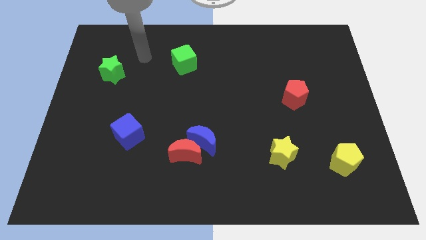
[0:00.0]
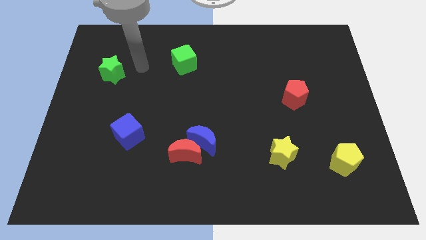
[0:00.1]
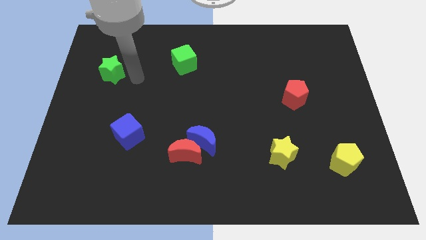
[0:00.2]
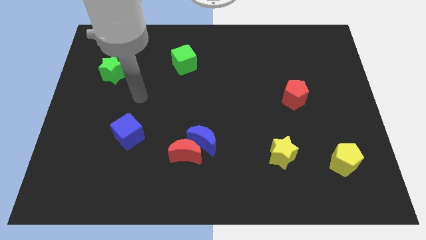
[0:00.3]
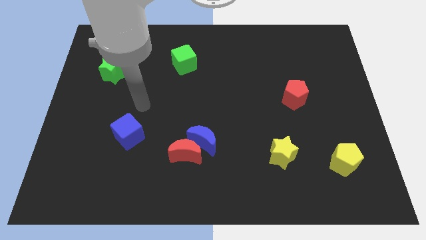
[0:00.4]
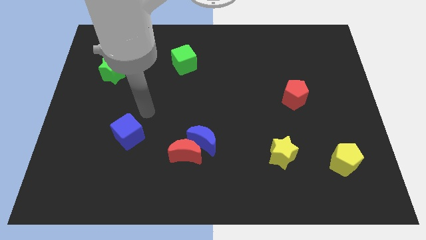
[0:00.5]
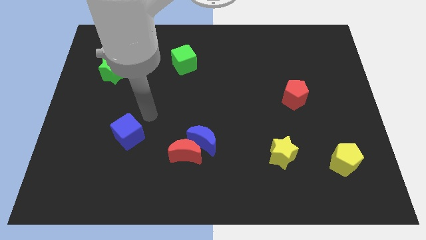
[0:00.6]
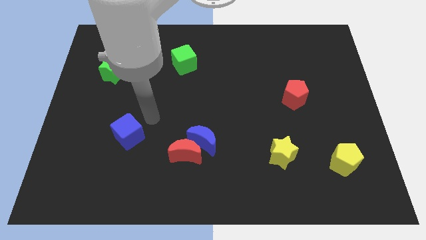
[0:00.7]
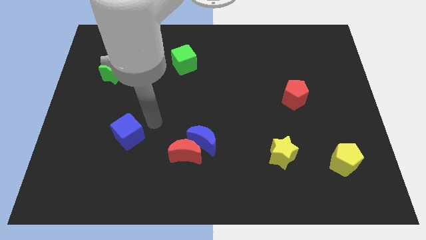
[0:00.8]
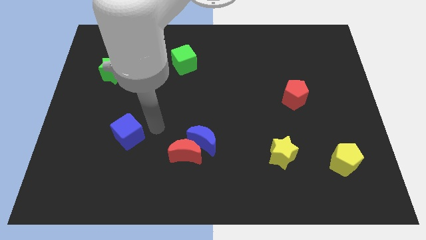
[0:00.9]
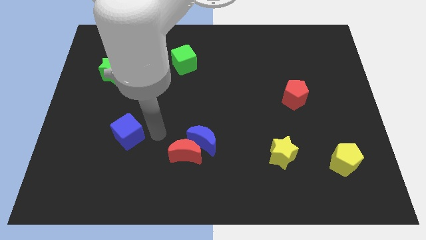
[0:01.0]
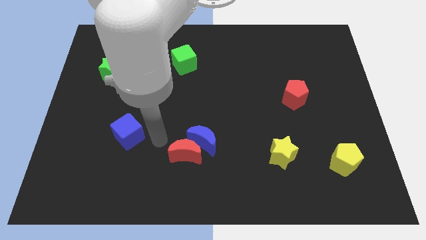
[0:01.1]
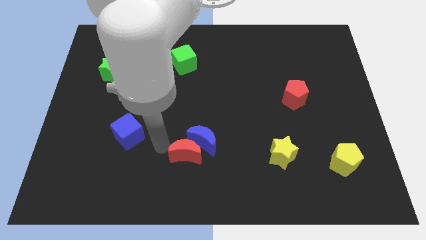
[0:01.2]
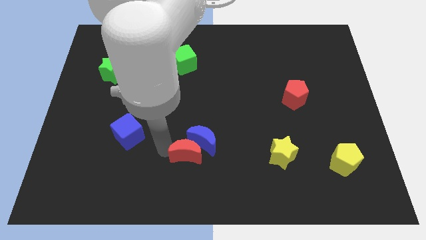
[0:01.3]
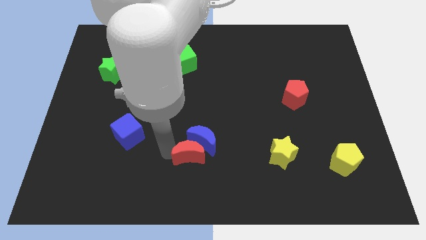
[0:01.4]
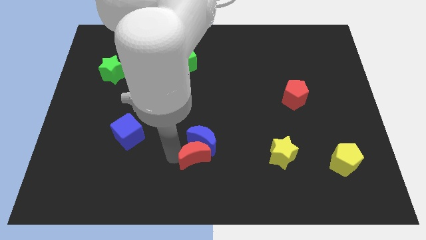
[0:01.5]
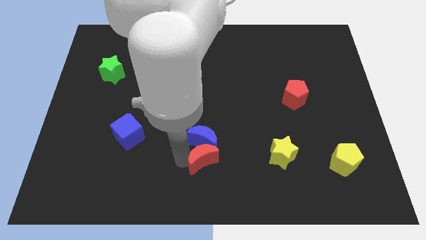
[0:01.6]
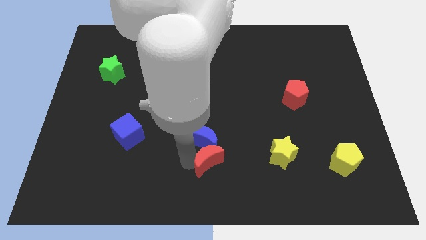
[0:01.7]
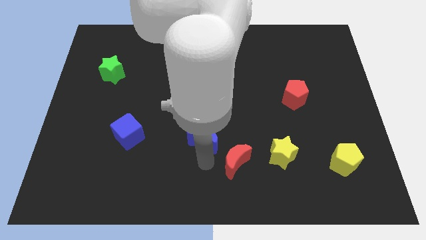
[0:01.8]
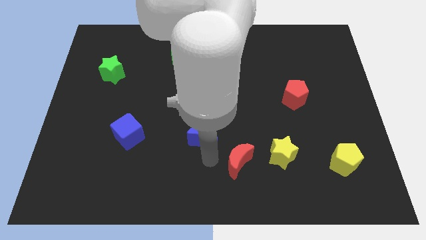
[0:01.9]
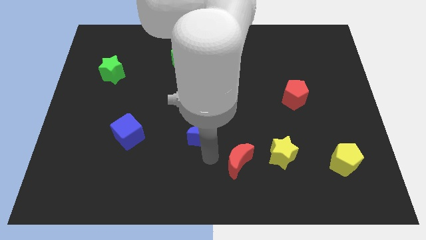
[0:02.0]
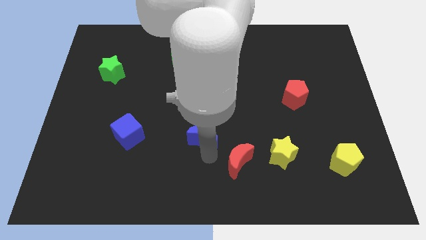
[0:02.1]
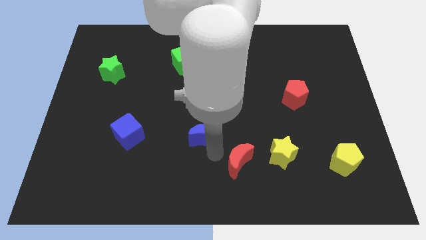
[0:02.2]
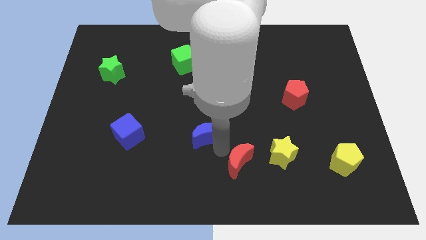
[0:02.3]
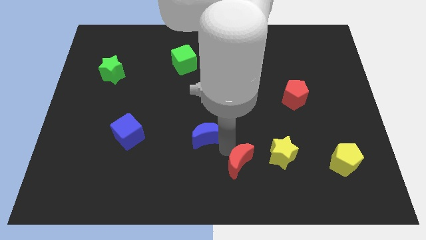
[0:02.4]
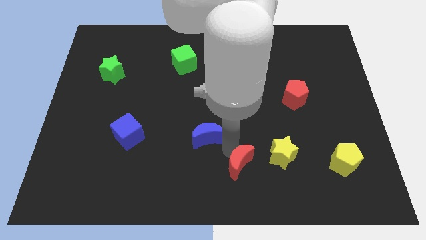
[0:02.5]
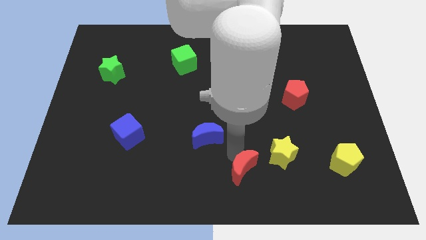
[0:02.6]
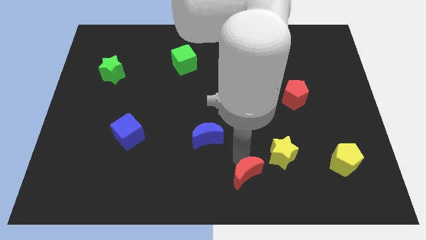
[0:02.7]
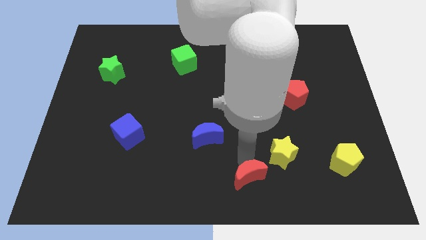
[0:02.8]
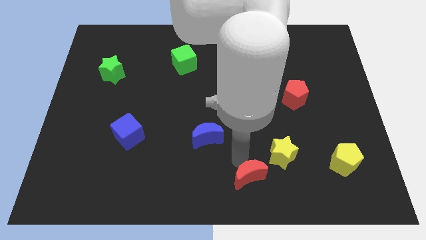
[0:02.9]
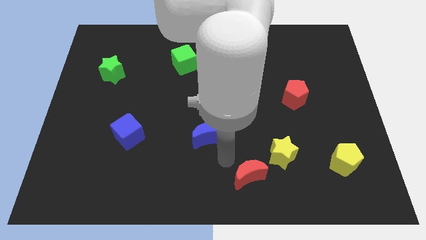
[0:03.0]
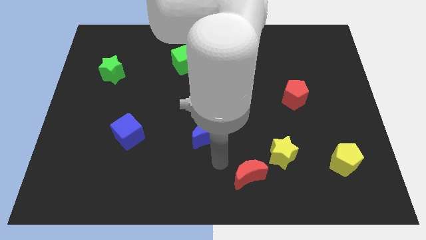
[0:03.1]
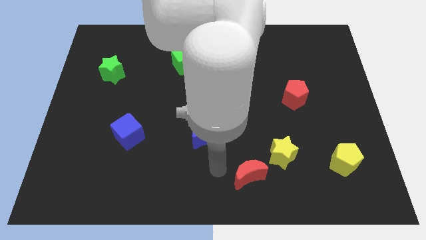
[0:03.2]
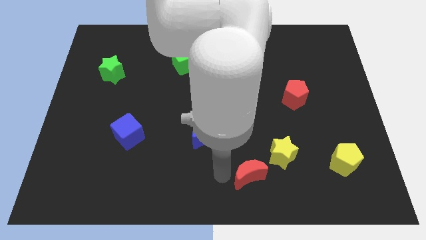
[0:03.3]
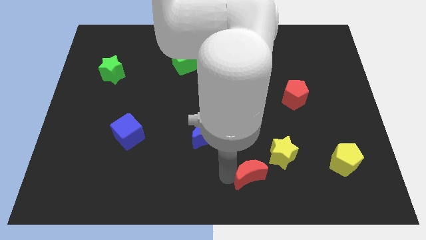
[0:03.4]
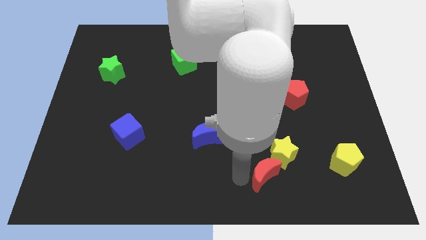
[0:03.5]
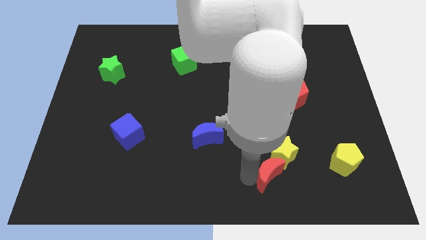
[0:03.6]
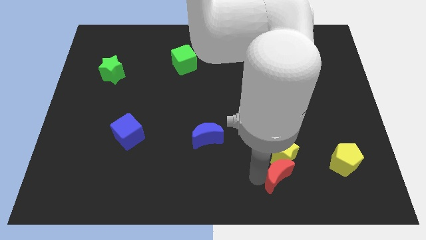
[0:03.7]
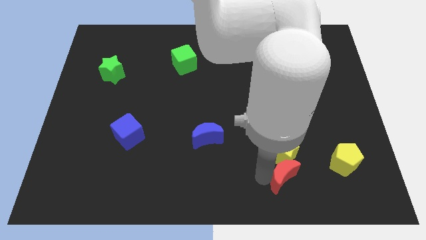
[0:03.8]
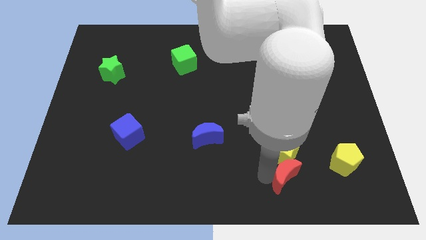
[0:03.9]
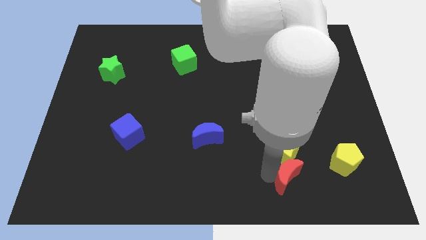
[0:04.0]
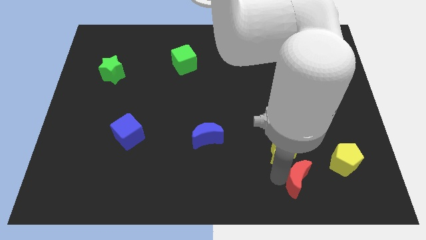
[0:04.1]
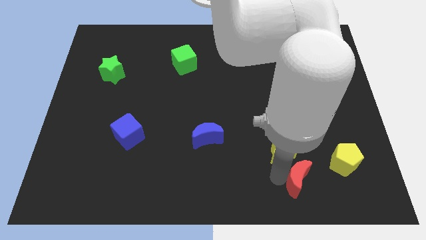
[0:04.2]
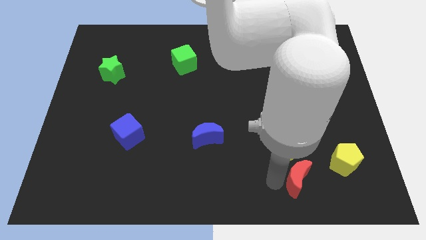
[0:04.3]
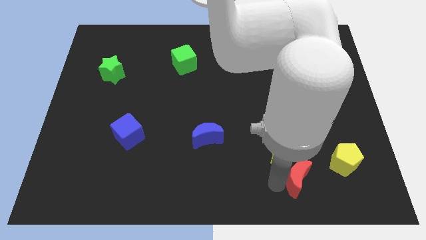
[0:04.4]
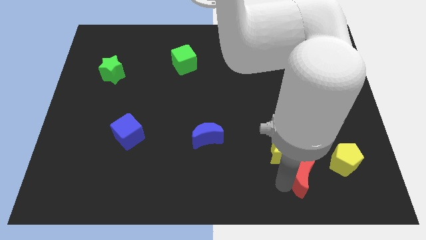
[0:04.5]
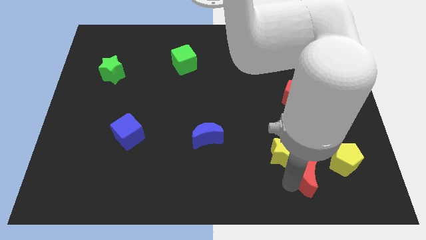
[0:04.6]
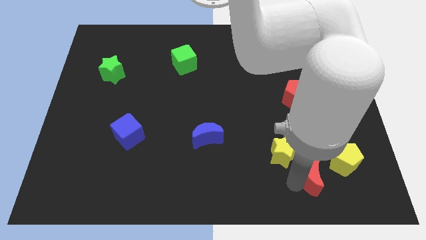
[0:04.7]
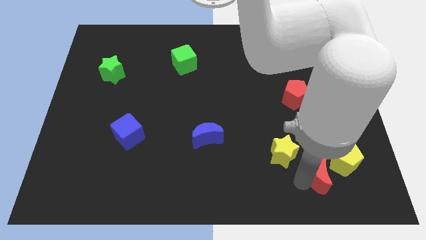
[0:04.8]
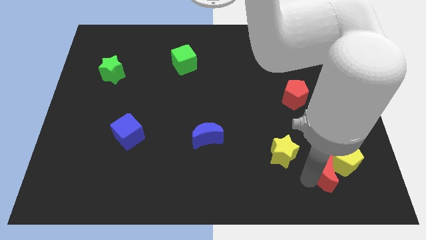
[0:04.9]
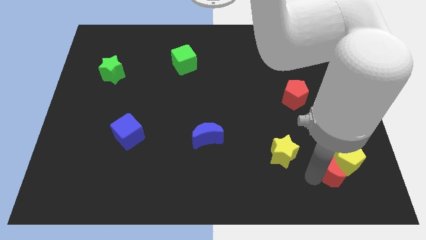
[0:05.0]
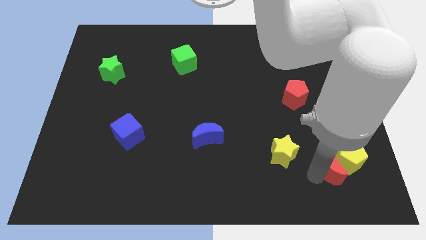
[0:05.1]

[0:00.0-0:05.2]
move the red moon towards the yellow pentagon

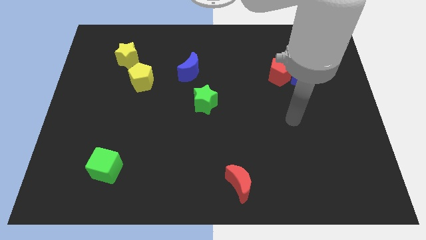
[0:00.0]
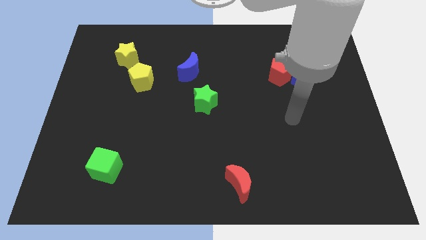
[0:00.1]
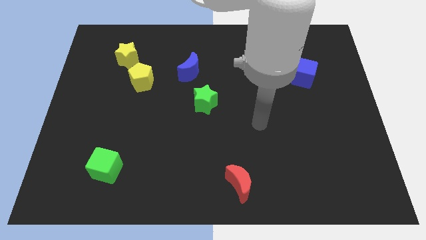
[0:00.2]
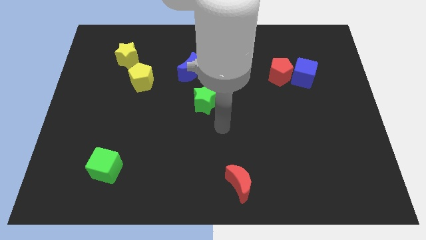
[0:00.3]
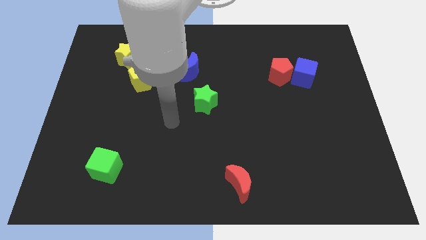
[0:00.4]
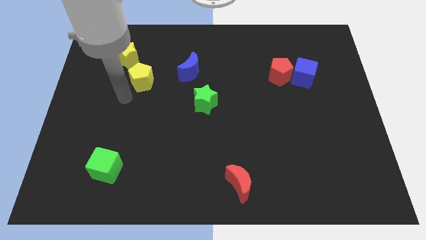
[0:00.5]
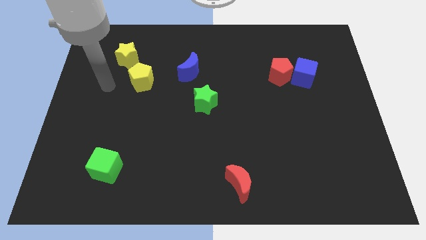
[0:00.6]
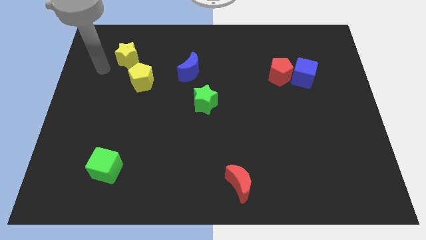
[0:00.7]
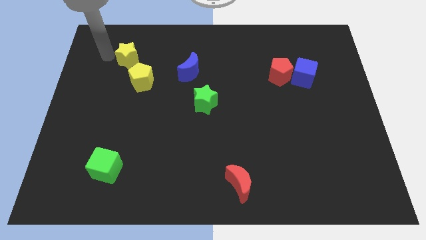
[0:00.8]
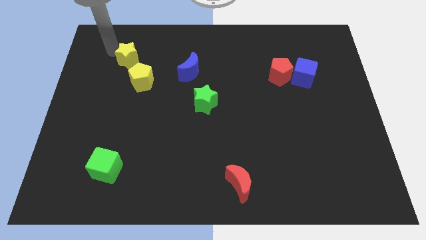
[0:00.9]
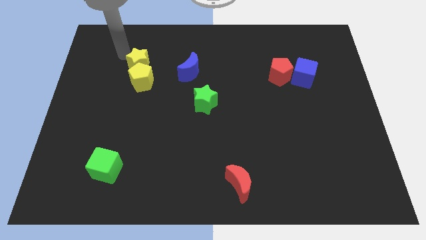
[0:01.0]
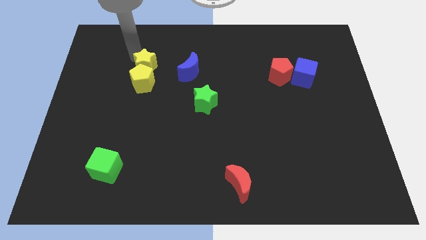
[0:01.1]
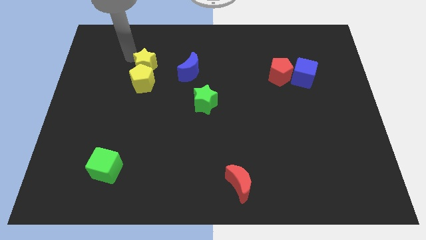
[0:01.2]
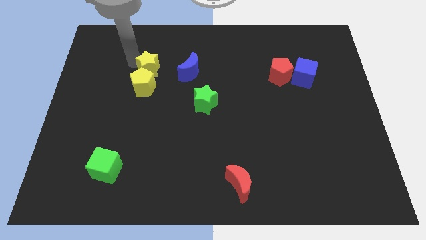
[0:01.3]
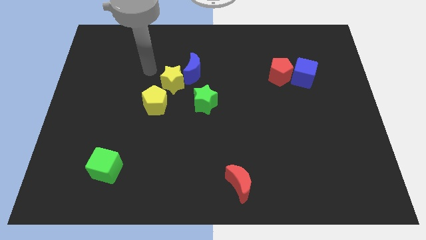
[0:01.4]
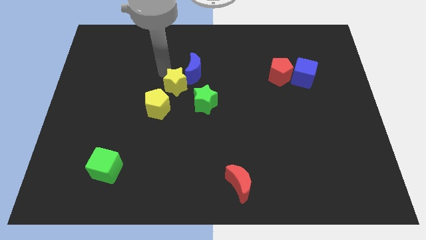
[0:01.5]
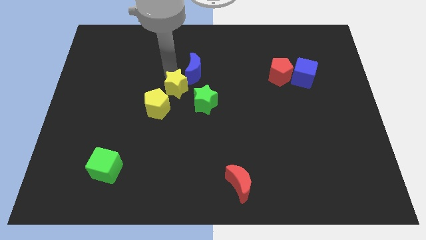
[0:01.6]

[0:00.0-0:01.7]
slide the yellow star towards the blue moon

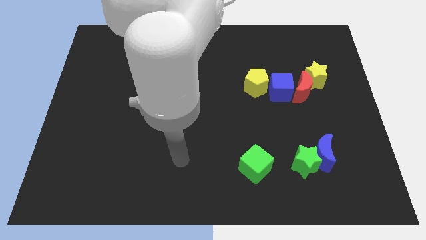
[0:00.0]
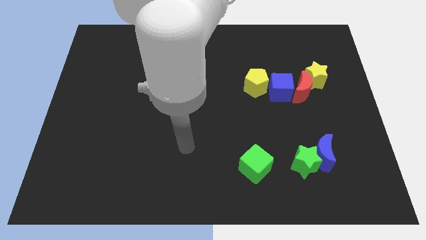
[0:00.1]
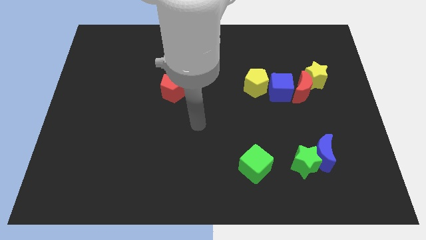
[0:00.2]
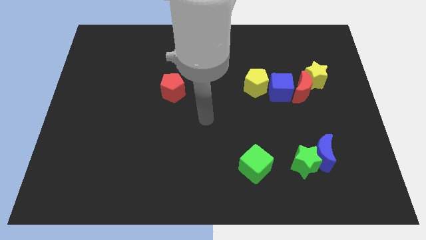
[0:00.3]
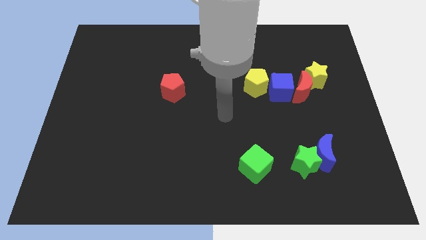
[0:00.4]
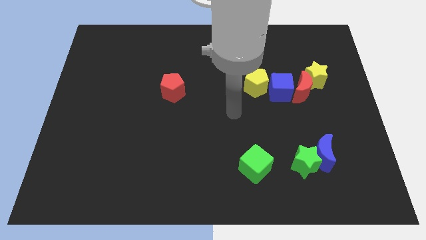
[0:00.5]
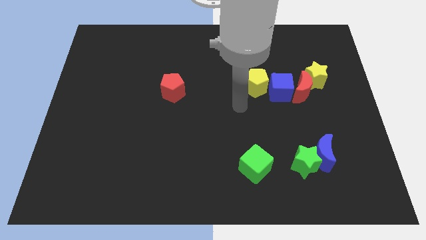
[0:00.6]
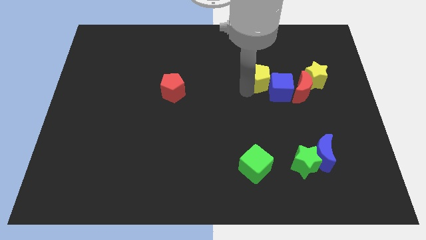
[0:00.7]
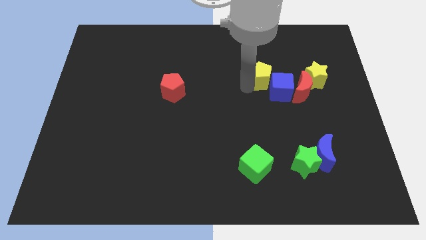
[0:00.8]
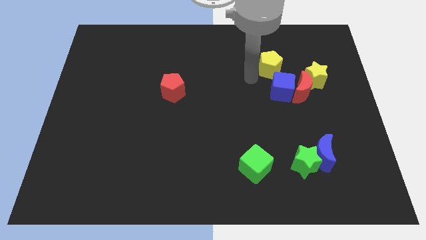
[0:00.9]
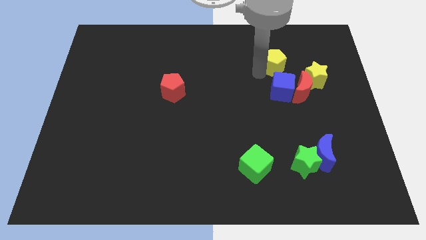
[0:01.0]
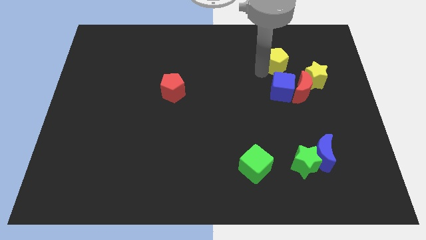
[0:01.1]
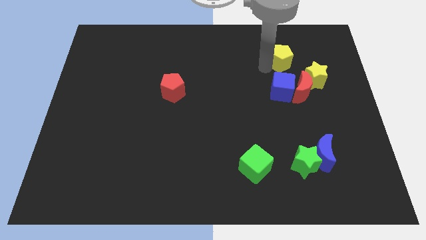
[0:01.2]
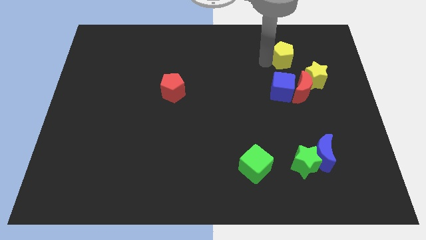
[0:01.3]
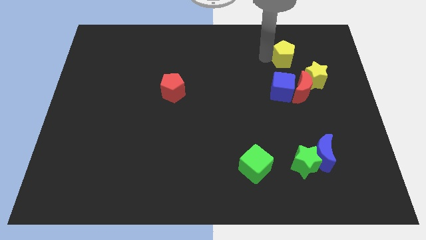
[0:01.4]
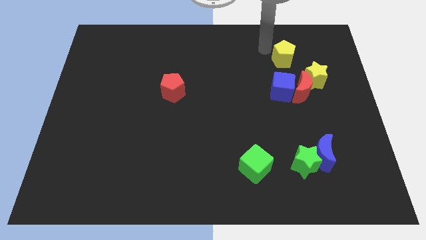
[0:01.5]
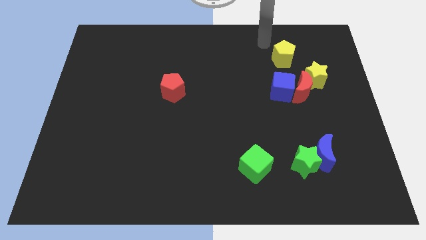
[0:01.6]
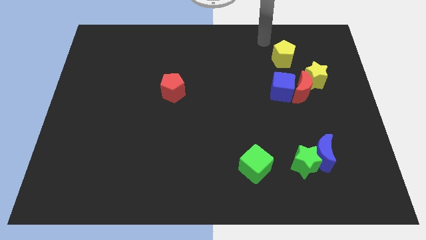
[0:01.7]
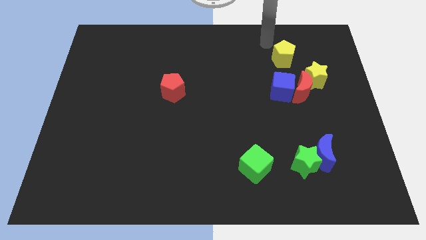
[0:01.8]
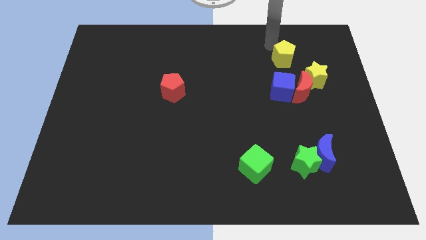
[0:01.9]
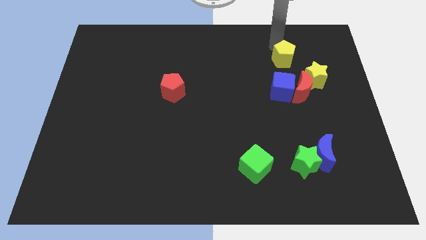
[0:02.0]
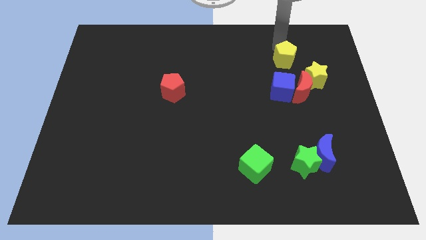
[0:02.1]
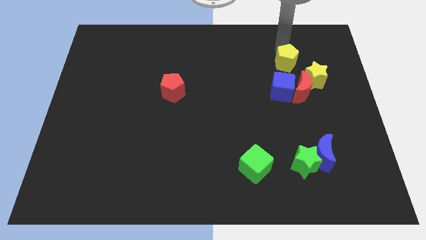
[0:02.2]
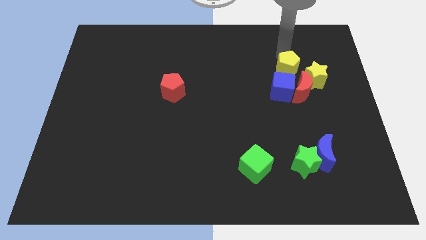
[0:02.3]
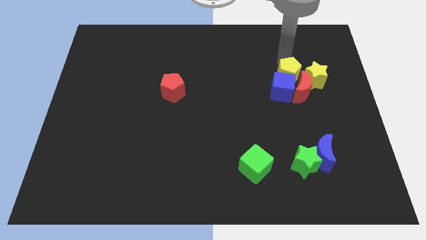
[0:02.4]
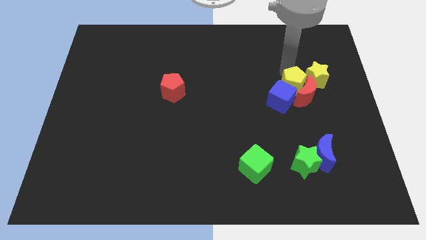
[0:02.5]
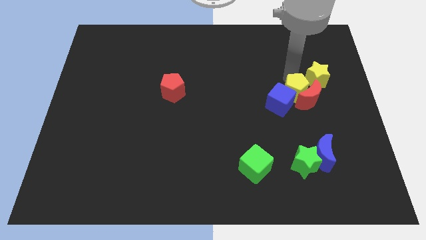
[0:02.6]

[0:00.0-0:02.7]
move the yellow pentagon close to the red moon
